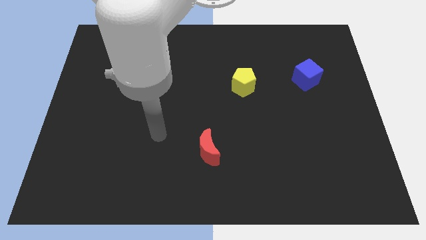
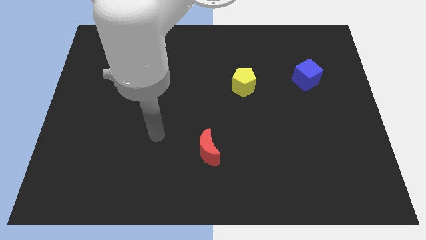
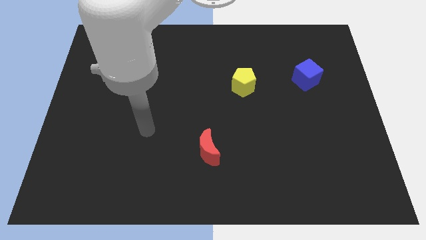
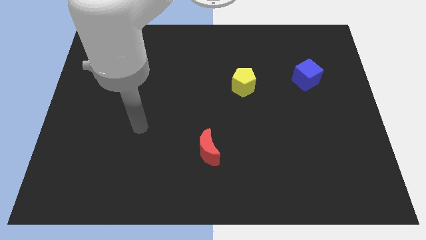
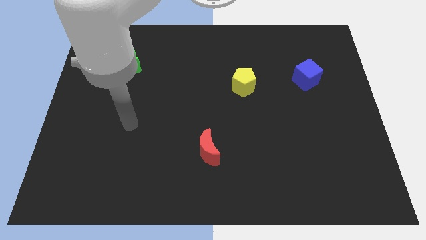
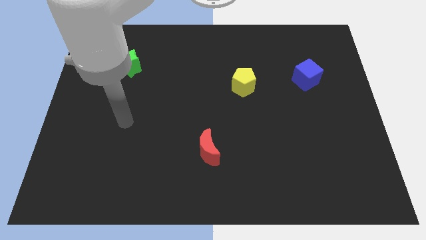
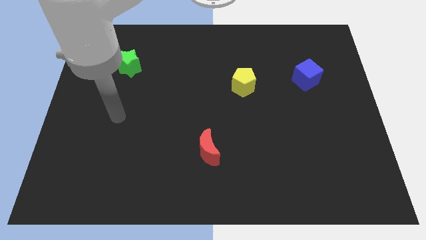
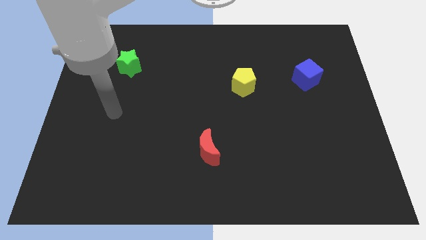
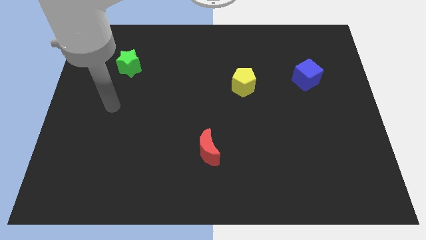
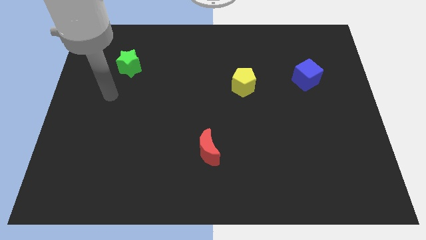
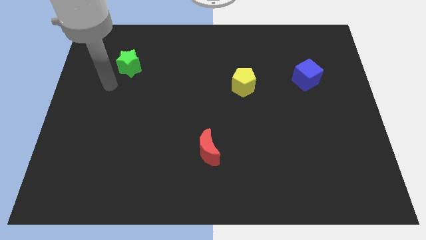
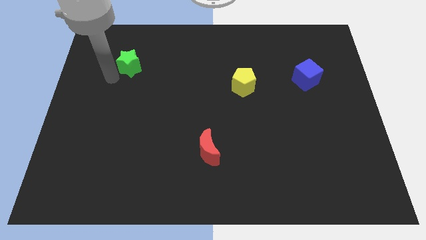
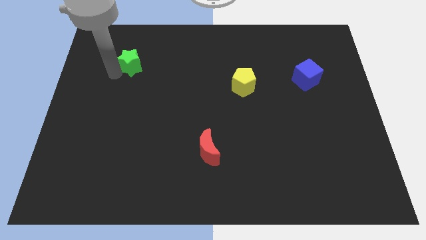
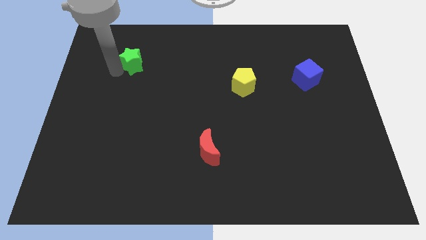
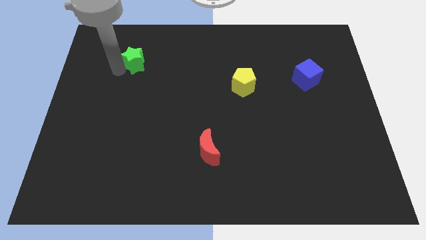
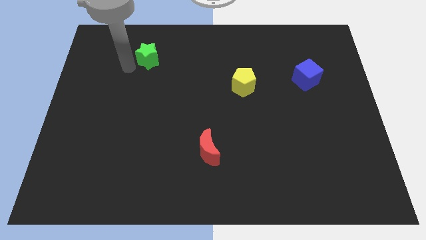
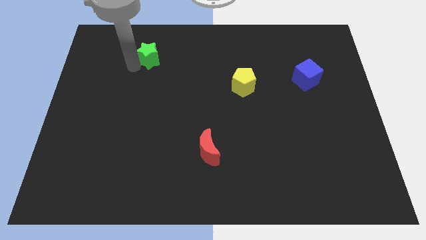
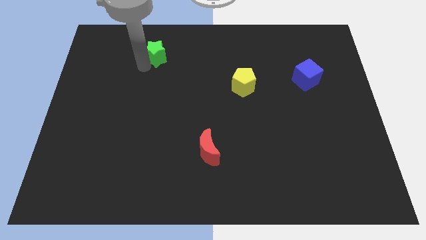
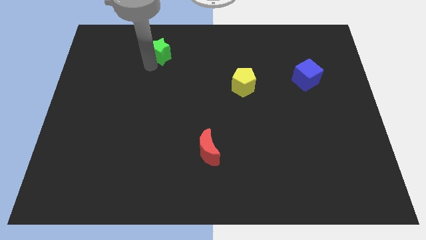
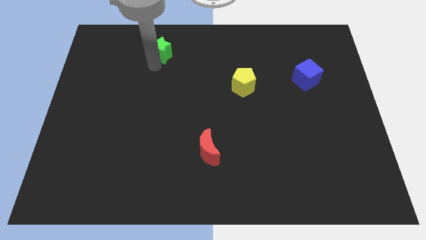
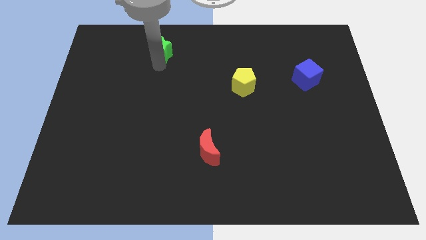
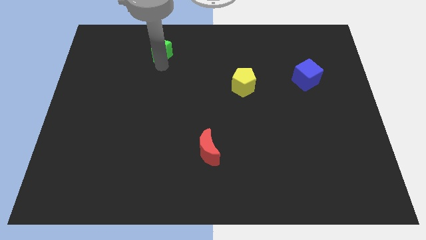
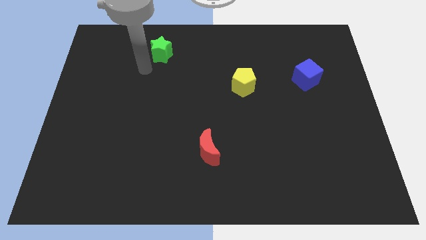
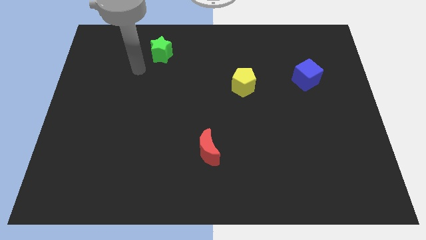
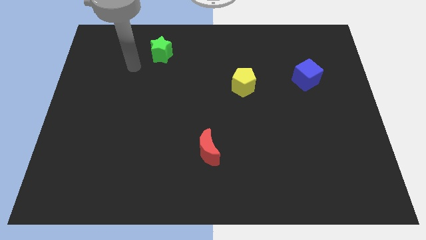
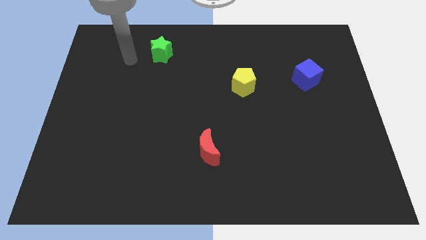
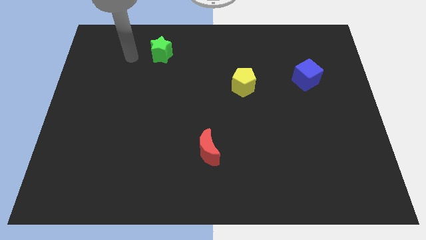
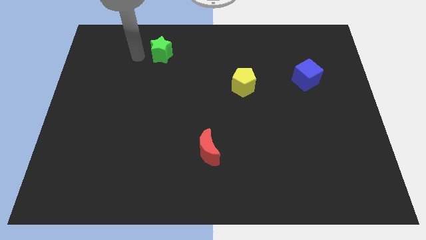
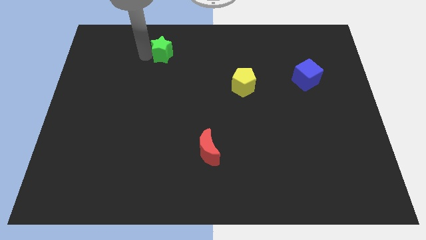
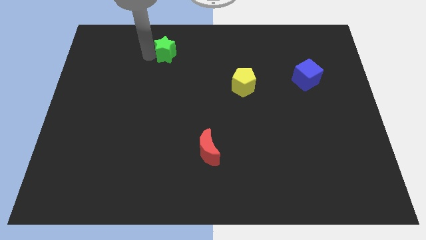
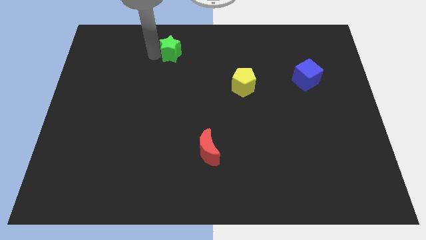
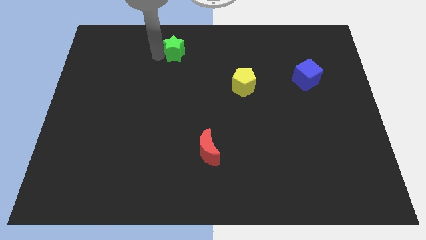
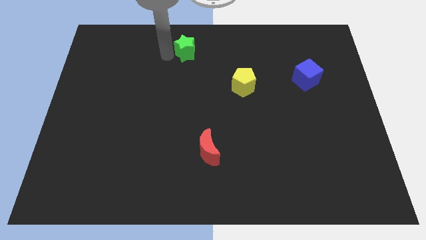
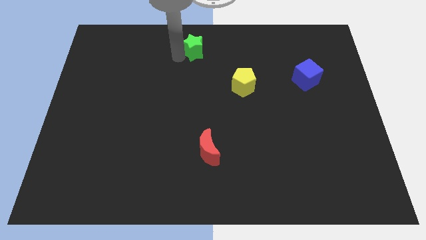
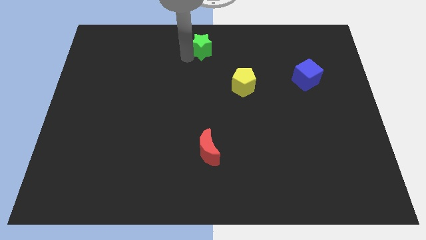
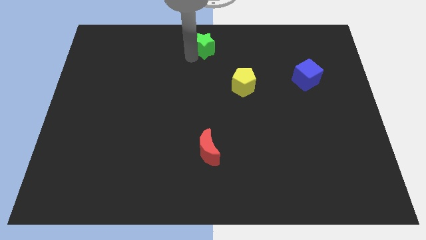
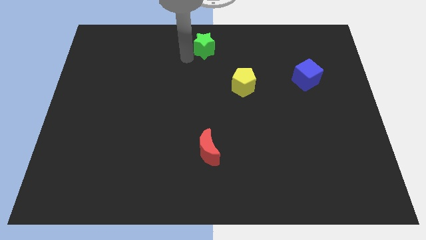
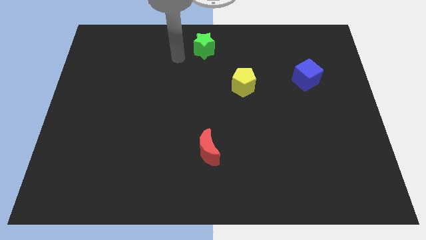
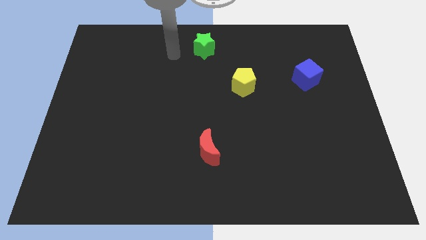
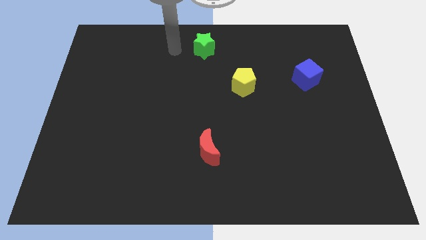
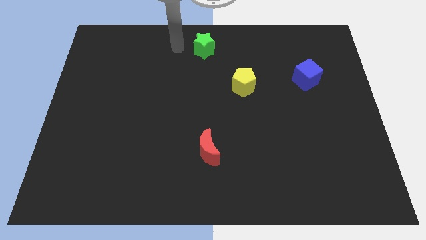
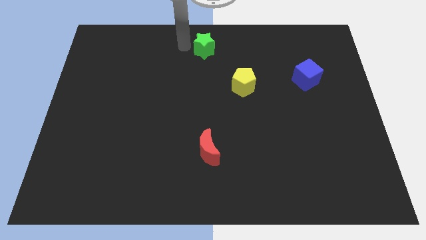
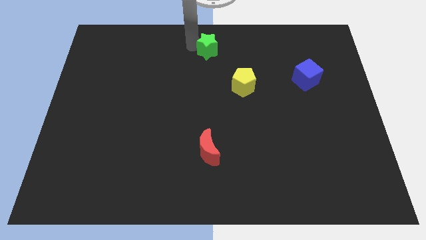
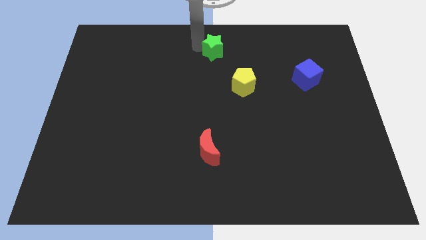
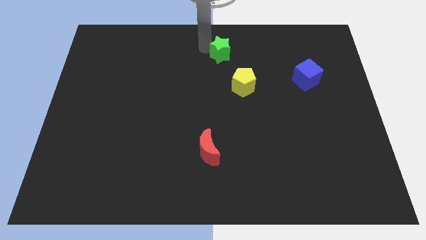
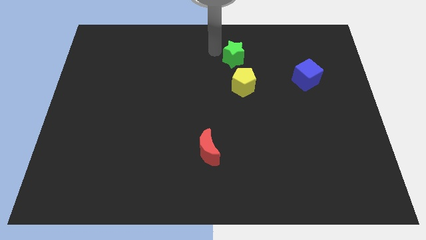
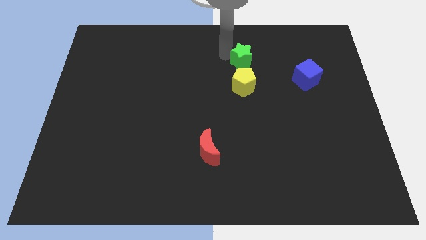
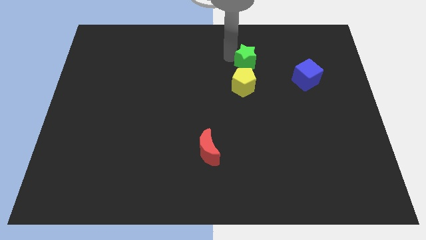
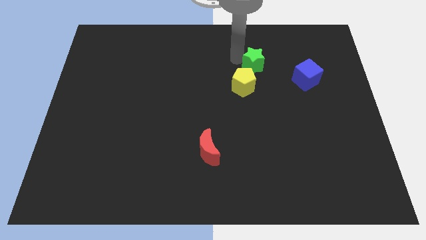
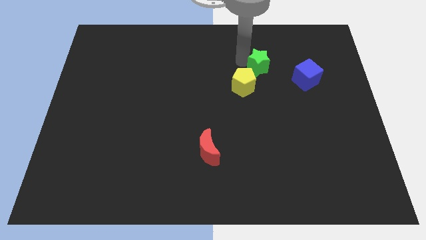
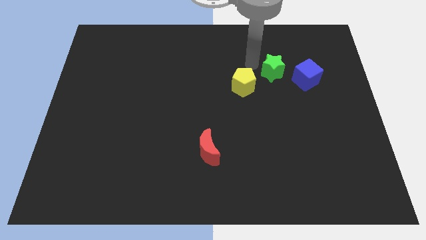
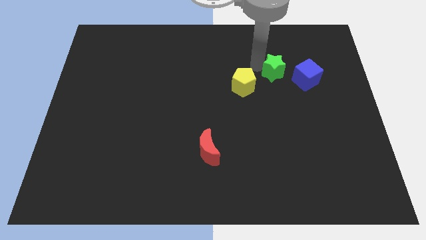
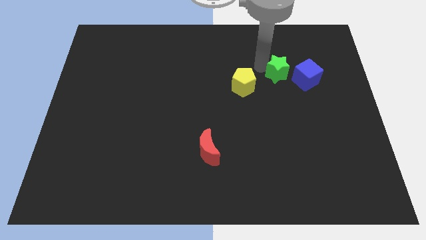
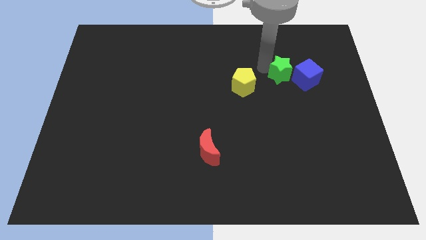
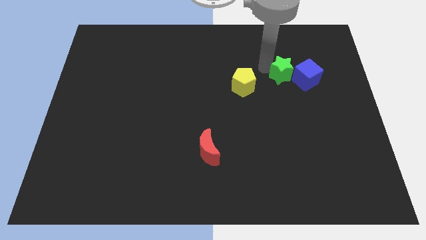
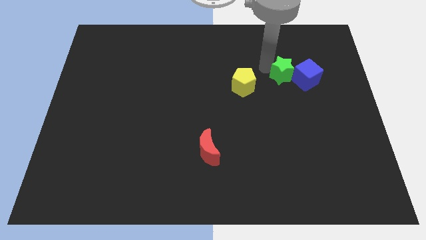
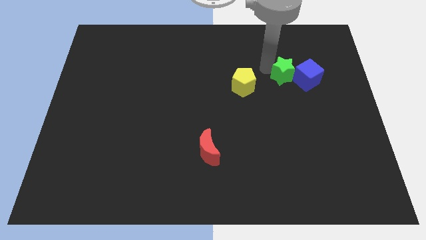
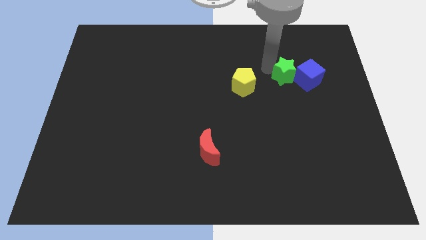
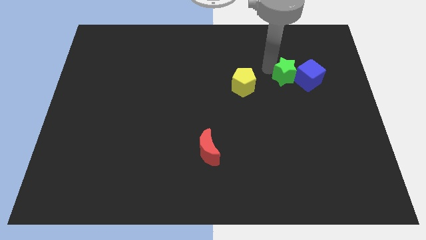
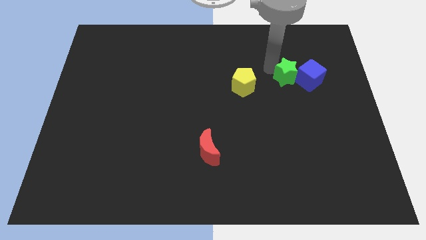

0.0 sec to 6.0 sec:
move the green star towards the cube

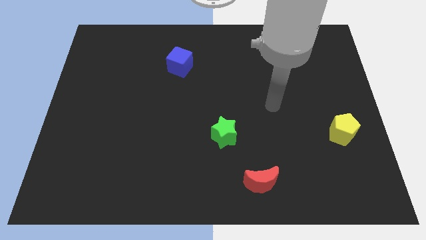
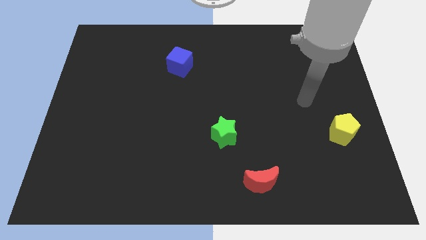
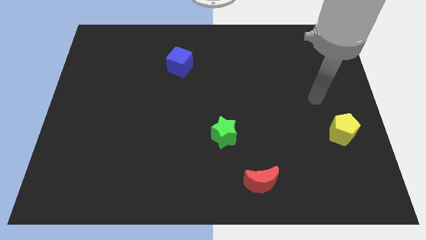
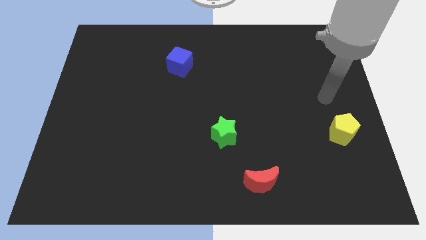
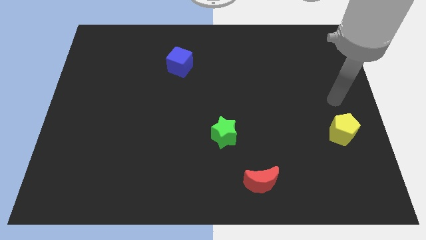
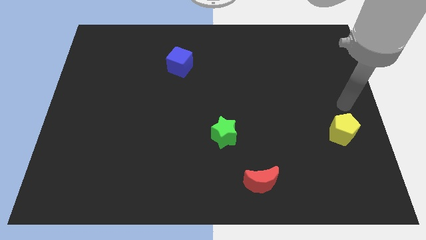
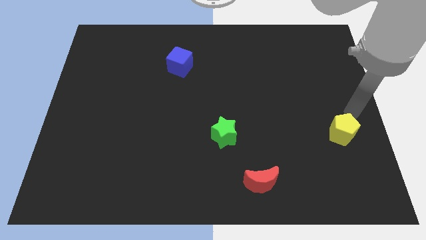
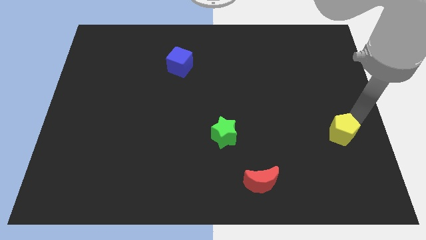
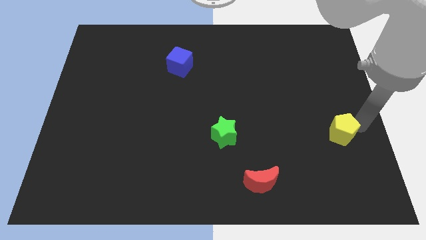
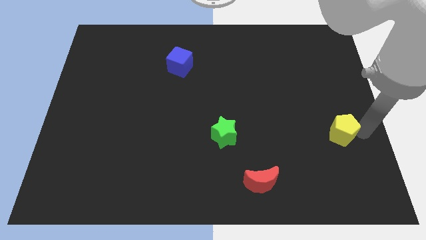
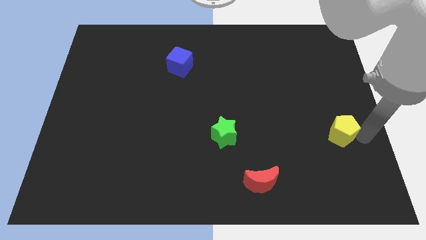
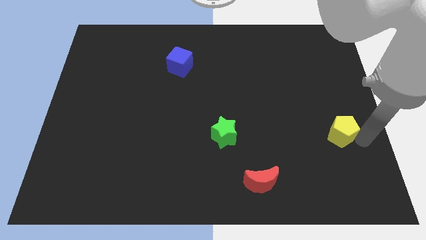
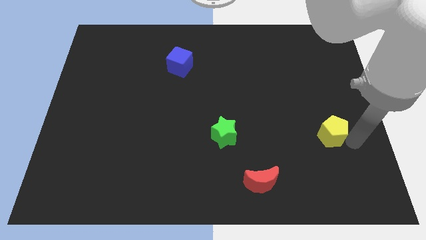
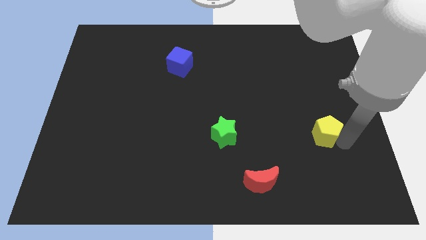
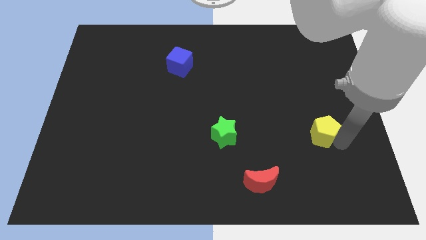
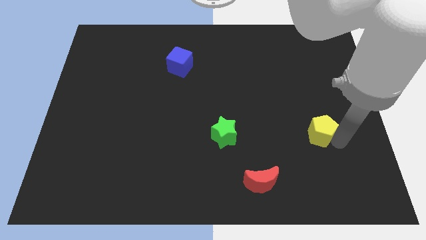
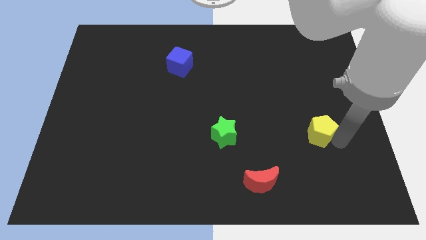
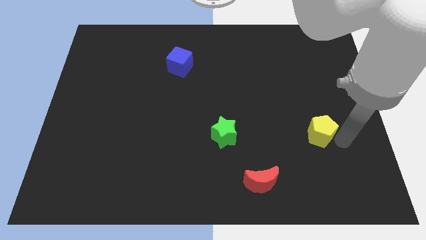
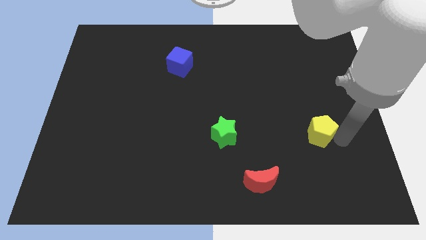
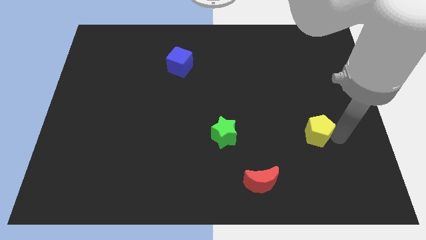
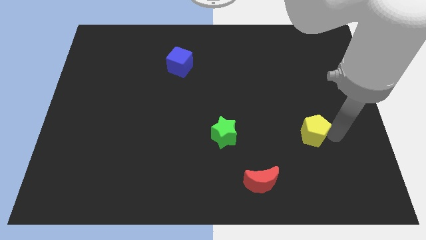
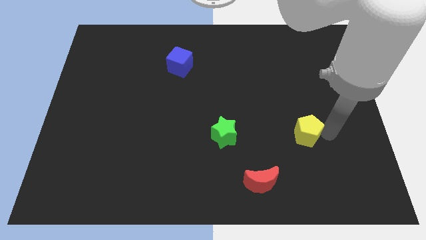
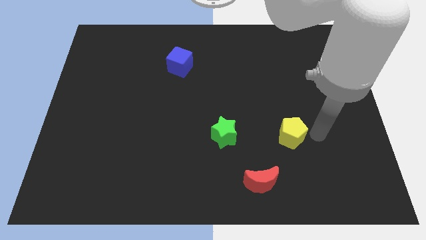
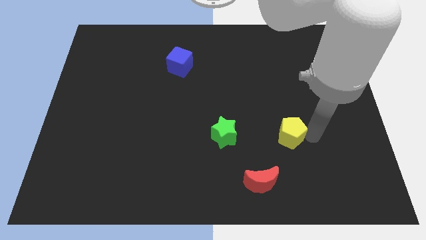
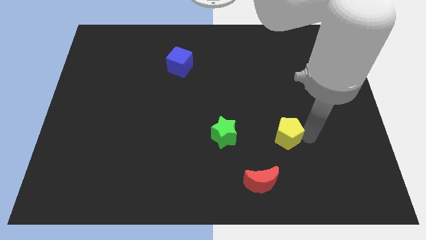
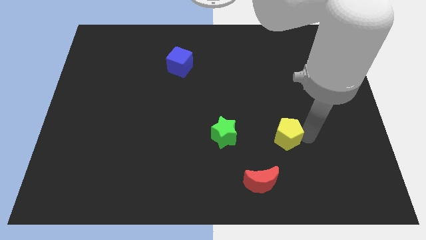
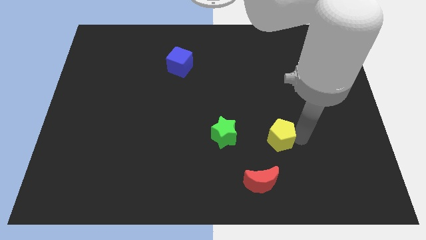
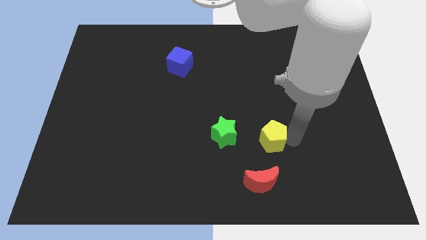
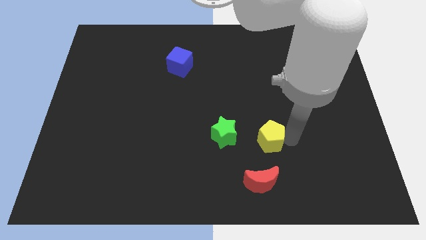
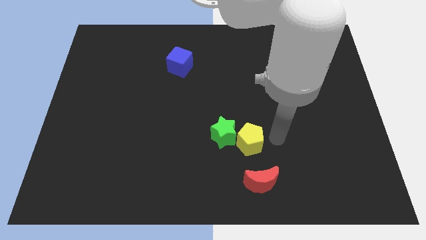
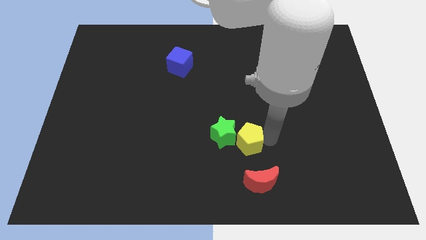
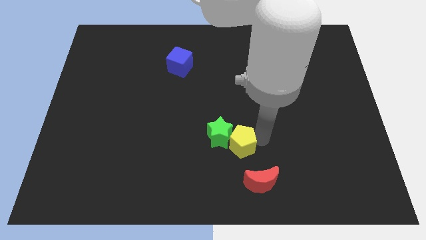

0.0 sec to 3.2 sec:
slide the yellow pentagon close to the star
